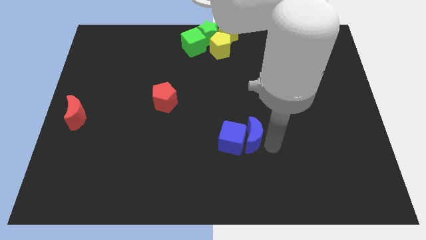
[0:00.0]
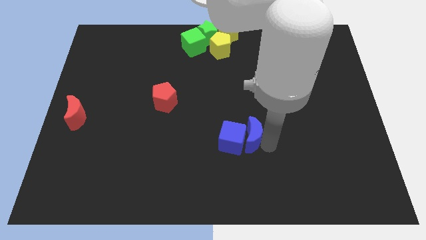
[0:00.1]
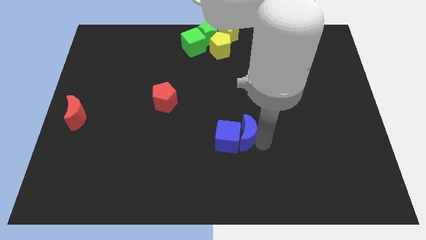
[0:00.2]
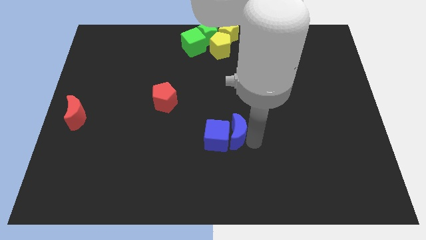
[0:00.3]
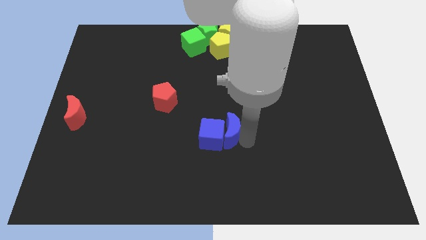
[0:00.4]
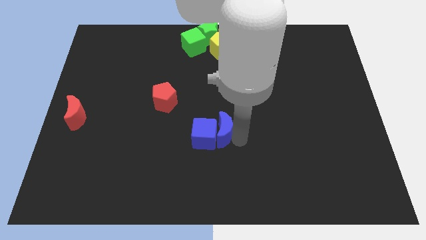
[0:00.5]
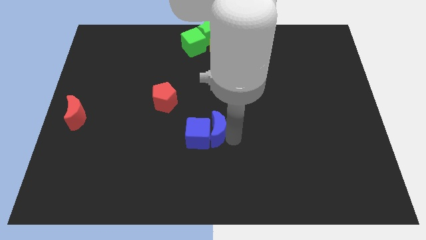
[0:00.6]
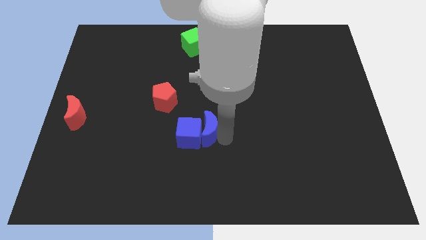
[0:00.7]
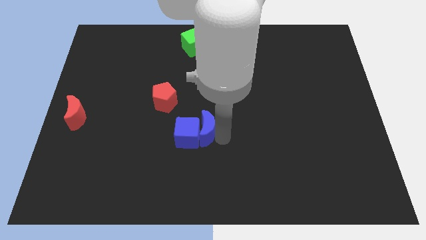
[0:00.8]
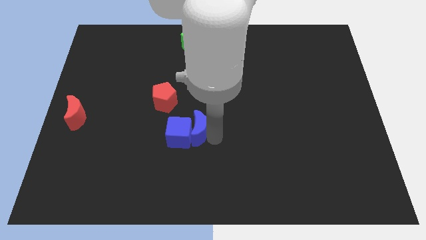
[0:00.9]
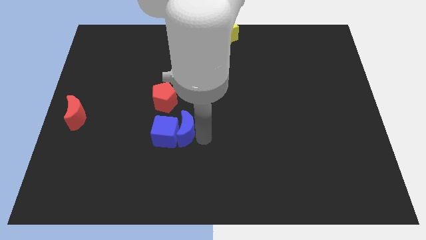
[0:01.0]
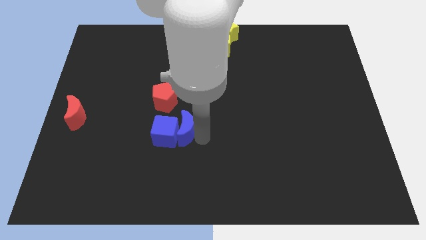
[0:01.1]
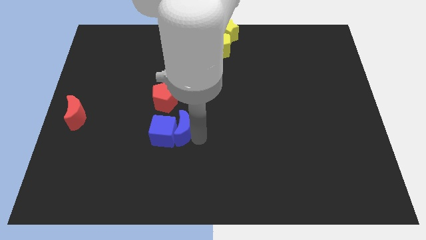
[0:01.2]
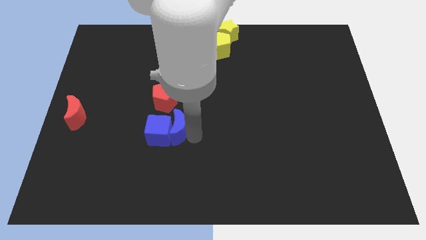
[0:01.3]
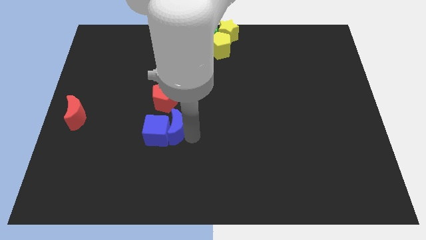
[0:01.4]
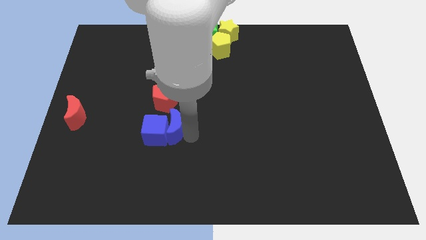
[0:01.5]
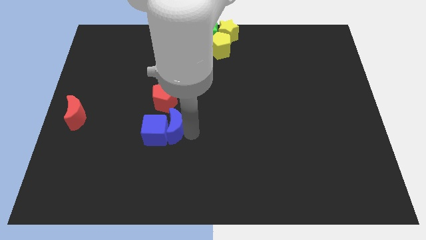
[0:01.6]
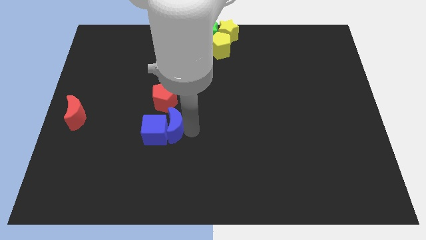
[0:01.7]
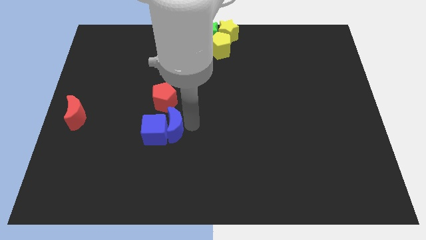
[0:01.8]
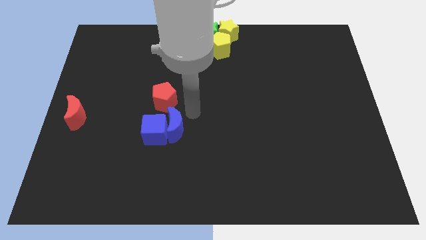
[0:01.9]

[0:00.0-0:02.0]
drag the group of blue blocks to the bottom of the red pentagon

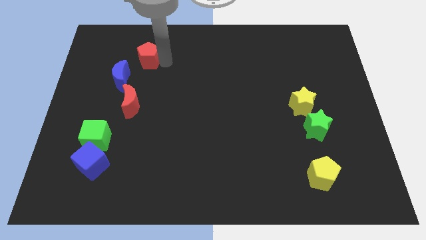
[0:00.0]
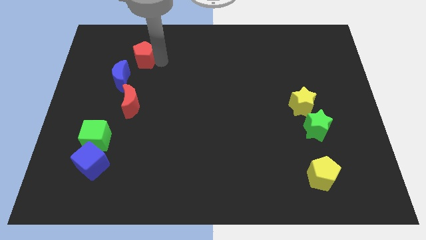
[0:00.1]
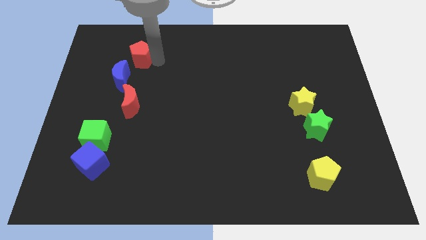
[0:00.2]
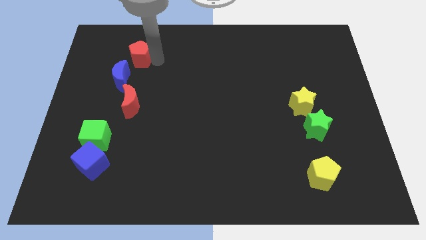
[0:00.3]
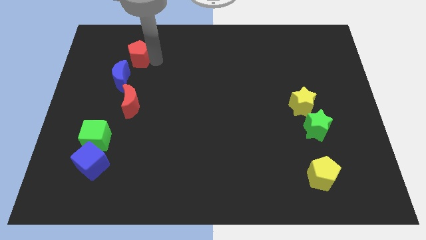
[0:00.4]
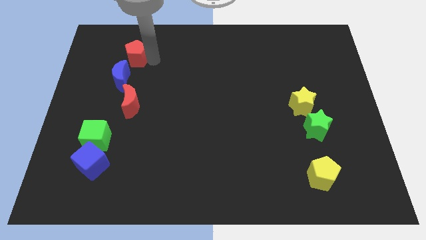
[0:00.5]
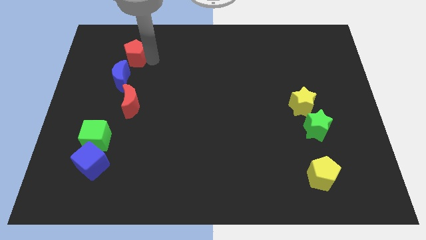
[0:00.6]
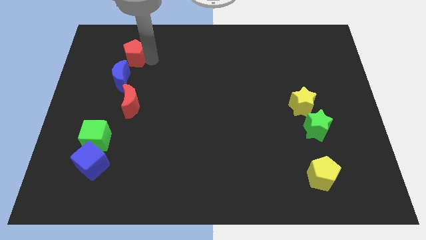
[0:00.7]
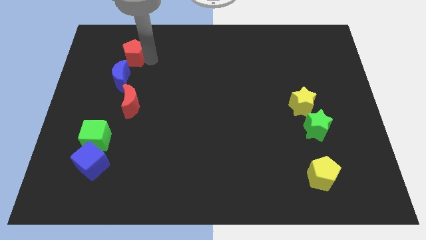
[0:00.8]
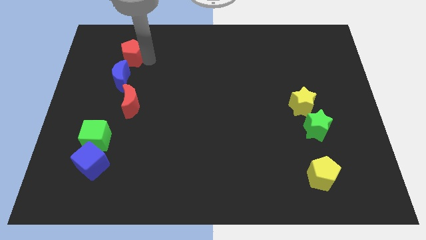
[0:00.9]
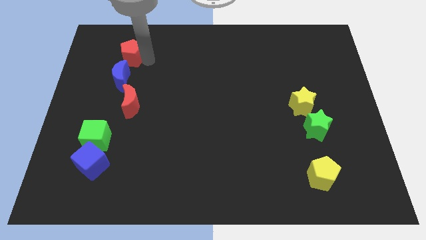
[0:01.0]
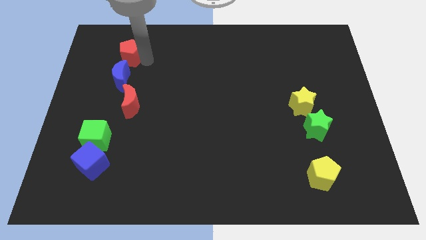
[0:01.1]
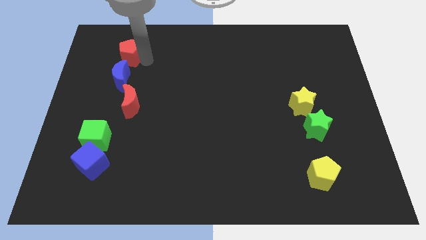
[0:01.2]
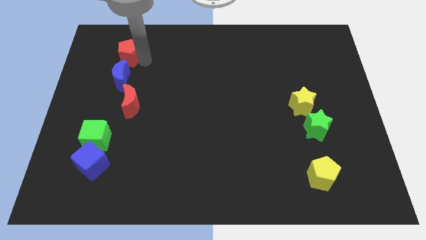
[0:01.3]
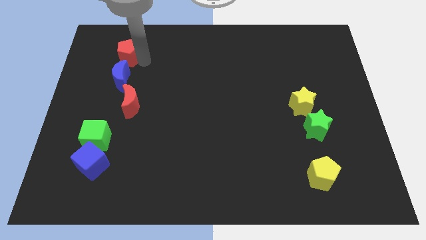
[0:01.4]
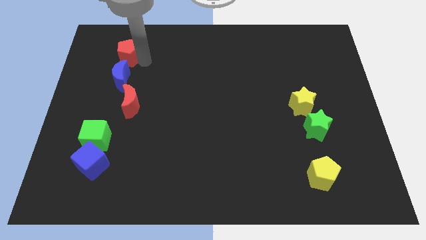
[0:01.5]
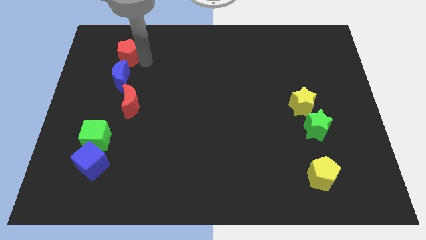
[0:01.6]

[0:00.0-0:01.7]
push red pentagon to the top of the blue moon

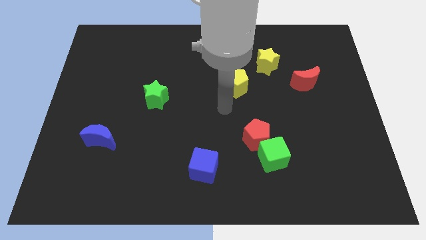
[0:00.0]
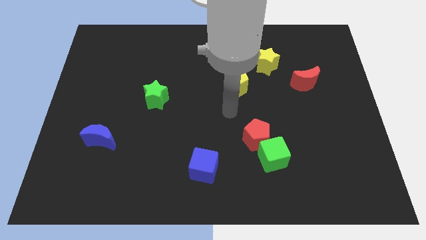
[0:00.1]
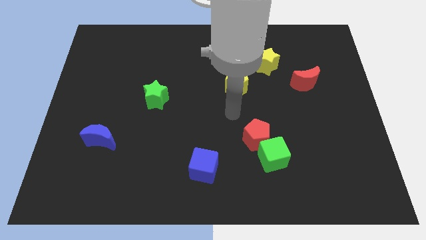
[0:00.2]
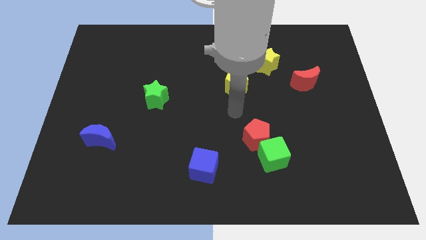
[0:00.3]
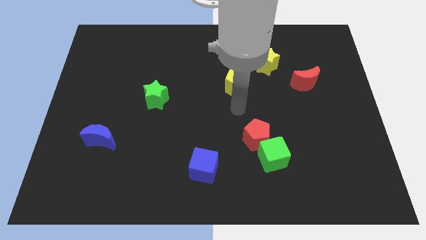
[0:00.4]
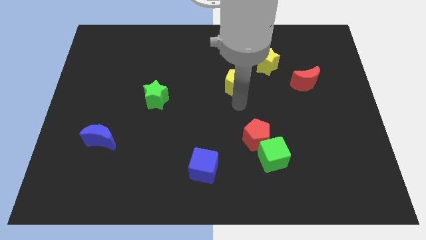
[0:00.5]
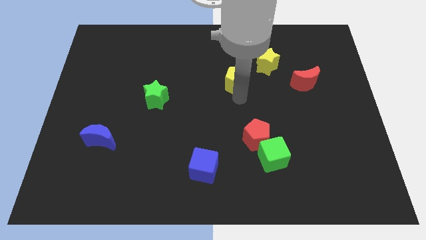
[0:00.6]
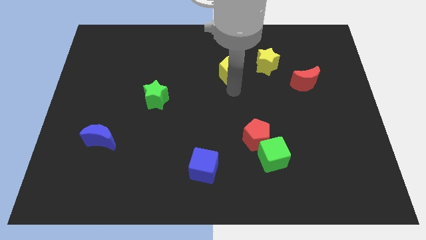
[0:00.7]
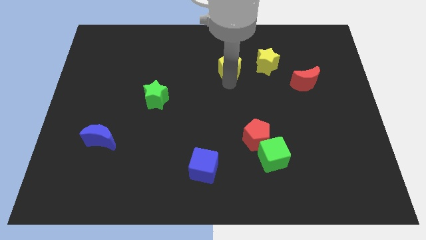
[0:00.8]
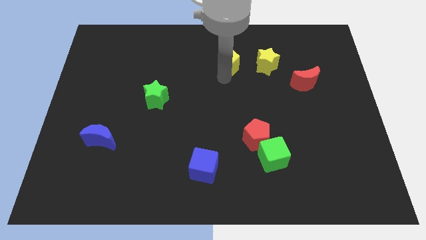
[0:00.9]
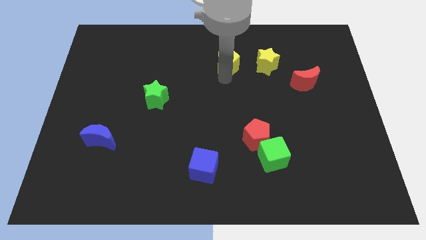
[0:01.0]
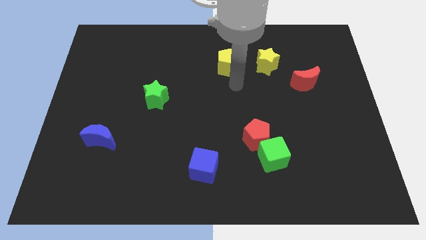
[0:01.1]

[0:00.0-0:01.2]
place the yellow pentagon to the left of the yellow star

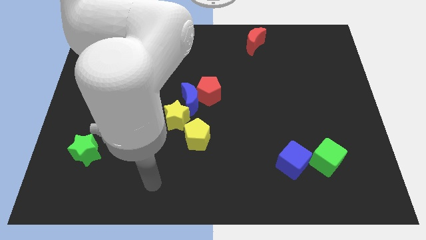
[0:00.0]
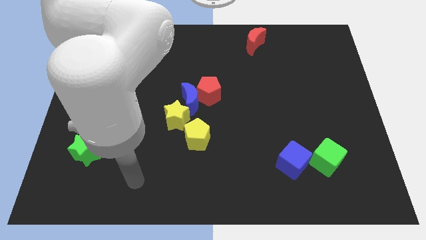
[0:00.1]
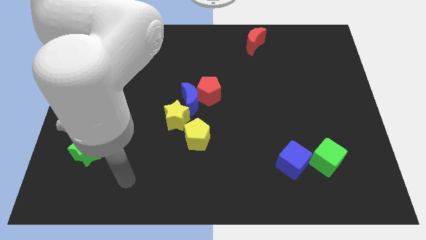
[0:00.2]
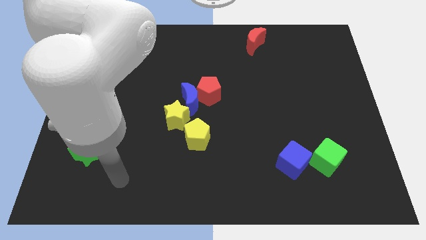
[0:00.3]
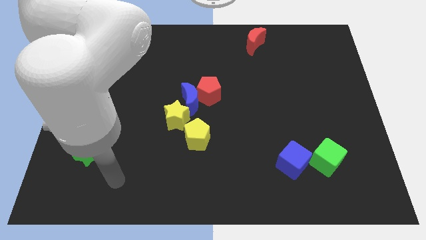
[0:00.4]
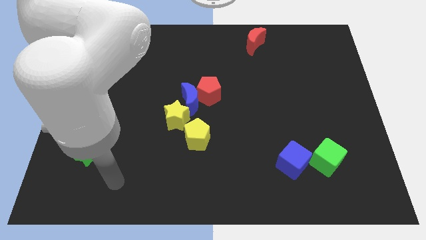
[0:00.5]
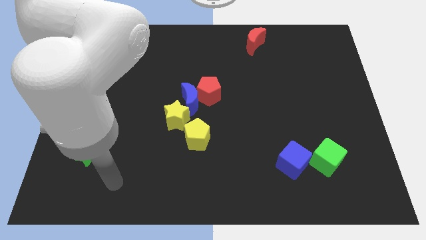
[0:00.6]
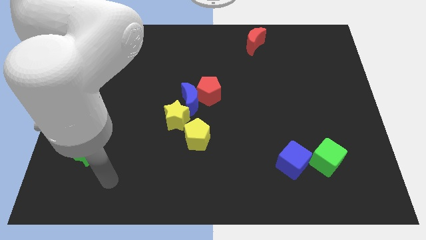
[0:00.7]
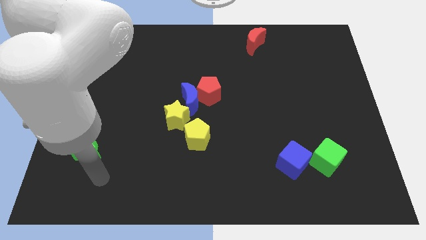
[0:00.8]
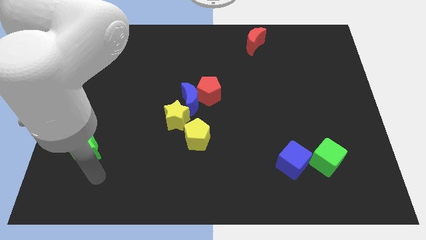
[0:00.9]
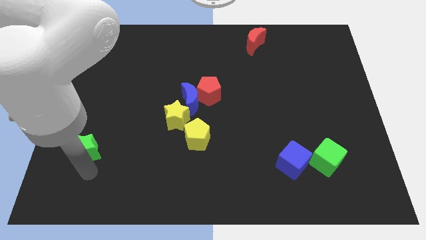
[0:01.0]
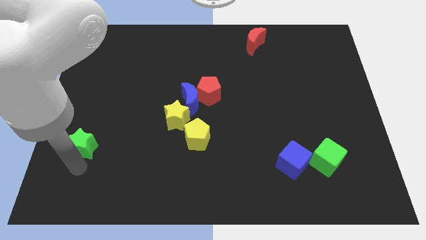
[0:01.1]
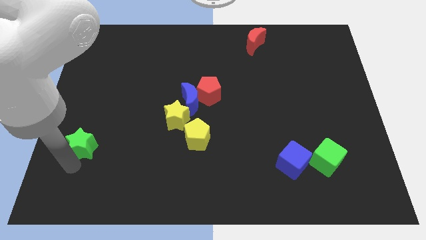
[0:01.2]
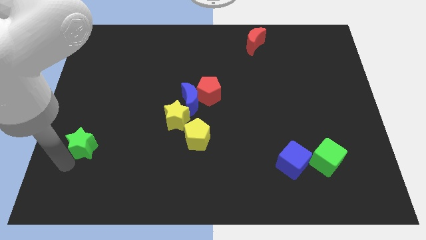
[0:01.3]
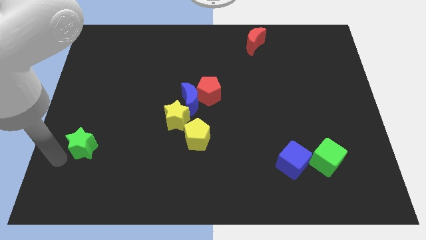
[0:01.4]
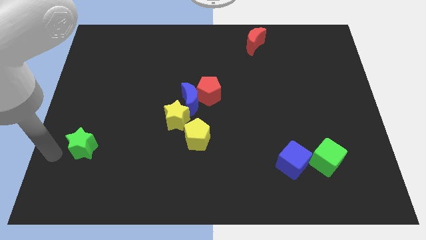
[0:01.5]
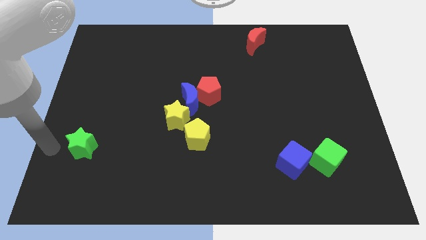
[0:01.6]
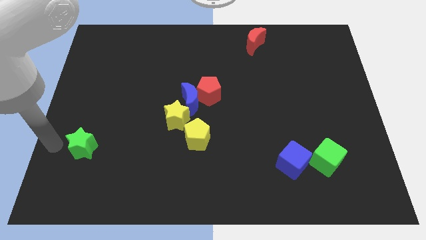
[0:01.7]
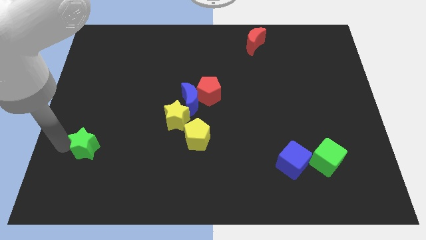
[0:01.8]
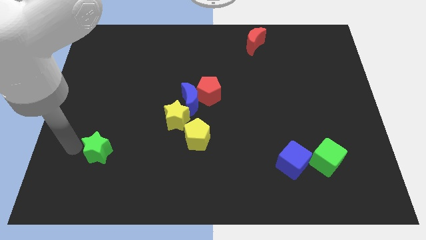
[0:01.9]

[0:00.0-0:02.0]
move the arm to the left side of the green star

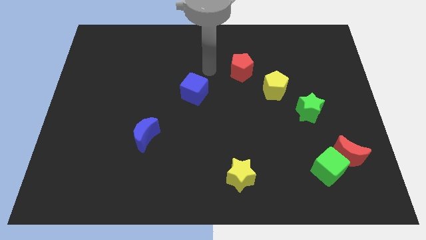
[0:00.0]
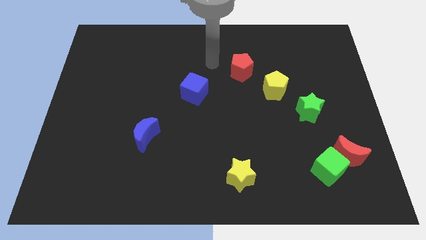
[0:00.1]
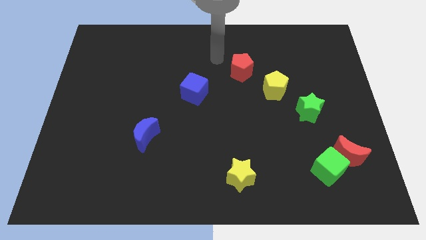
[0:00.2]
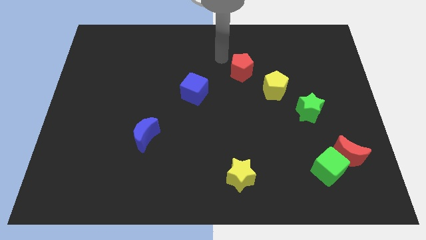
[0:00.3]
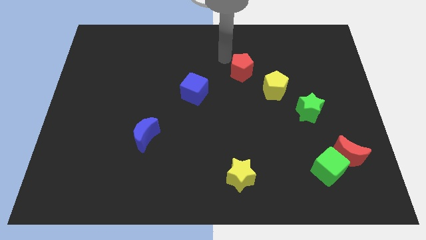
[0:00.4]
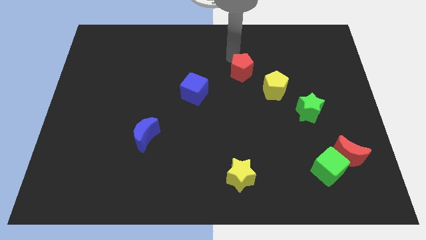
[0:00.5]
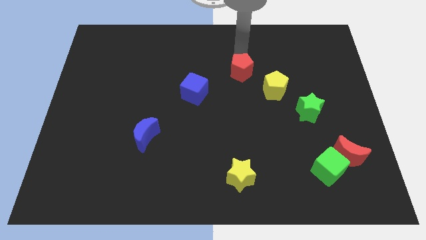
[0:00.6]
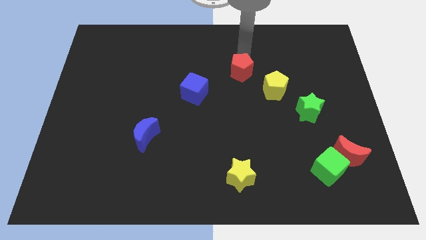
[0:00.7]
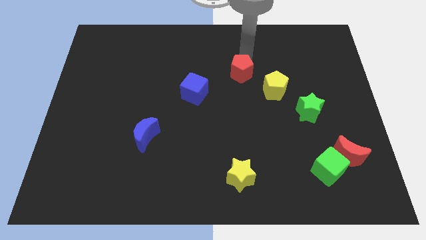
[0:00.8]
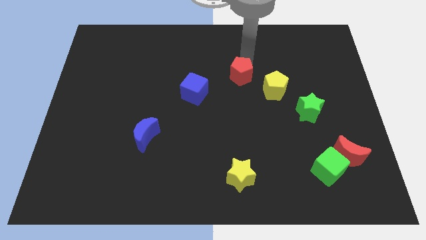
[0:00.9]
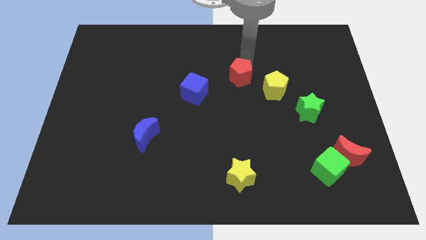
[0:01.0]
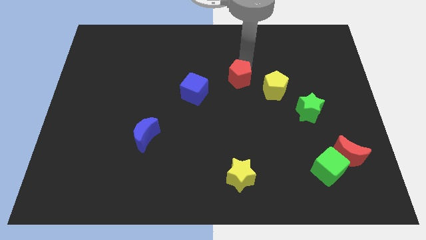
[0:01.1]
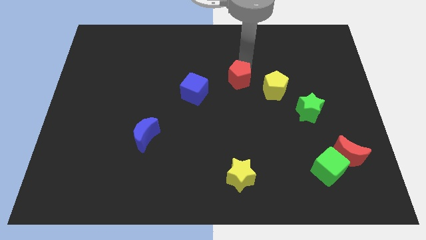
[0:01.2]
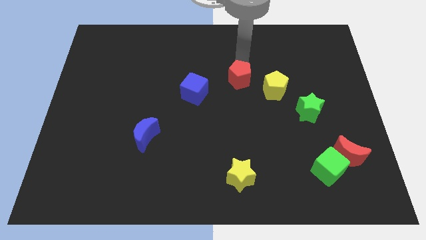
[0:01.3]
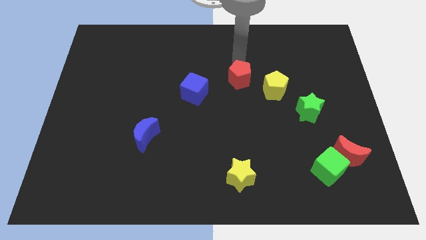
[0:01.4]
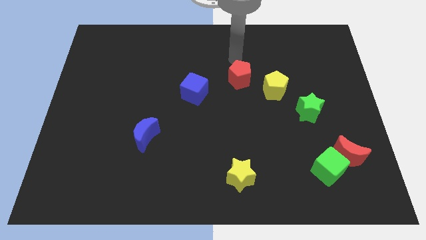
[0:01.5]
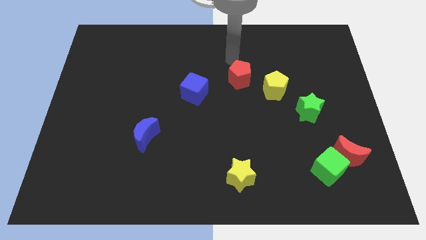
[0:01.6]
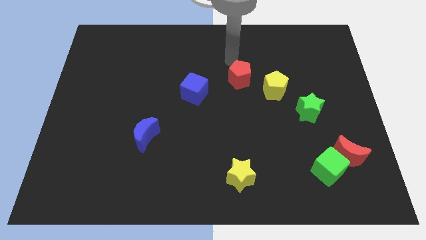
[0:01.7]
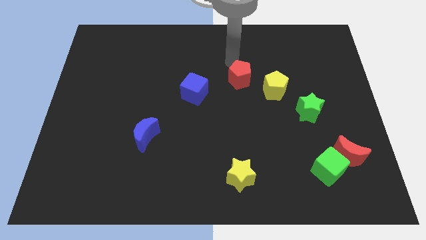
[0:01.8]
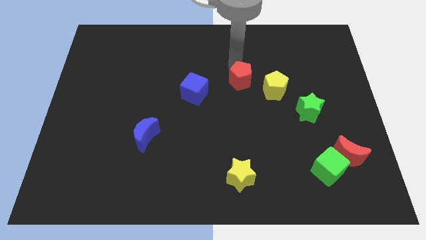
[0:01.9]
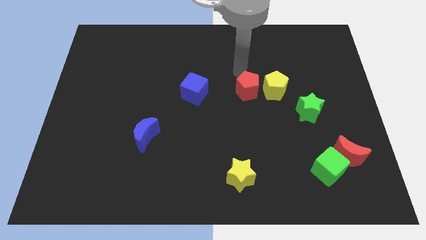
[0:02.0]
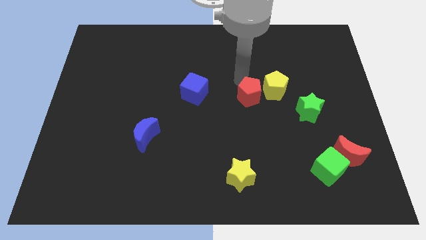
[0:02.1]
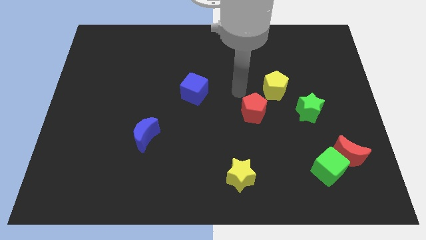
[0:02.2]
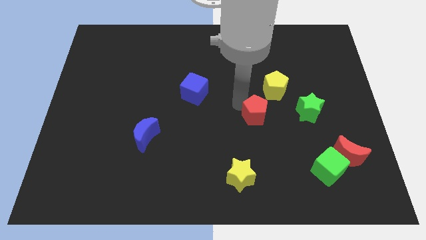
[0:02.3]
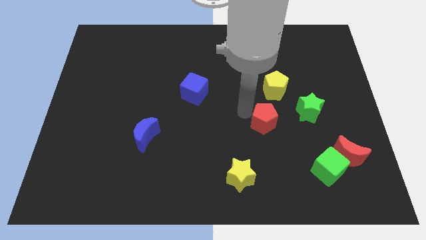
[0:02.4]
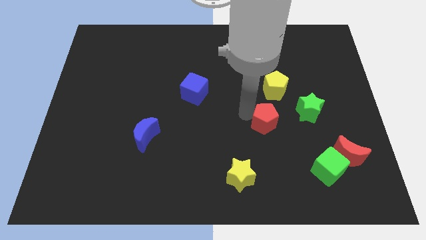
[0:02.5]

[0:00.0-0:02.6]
place the red pentagon diagonally to the blue cube
